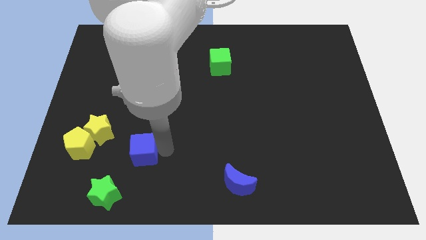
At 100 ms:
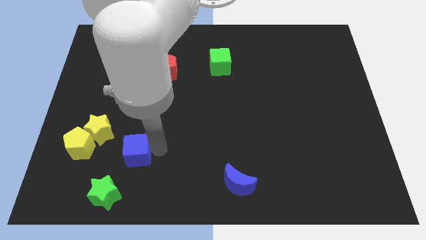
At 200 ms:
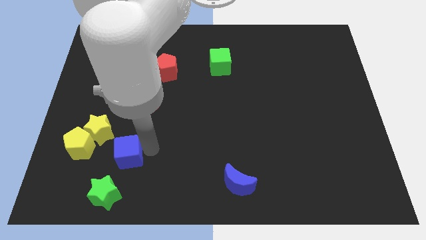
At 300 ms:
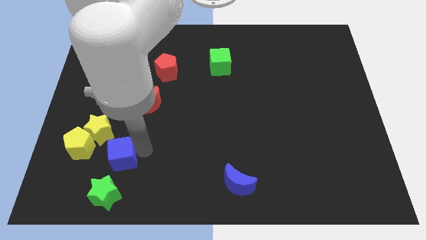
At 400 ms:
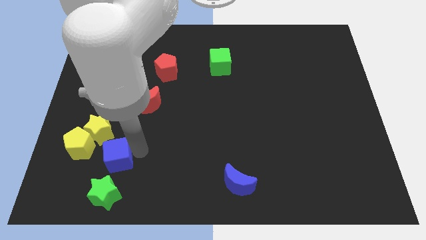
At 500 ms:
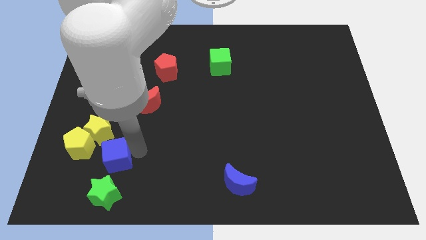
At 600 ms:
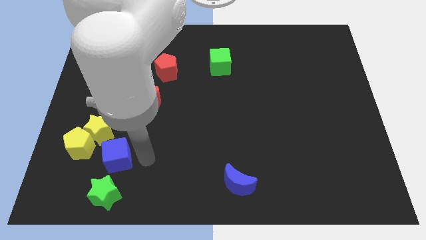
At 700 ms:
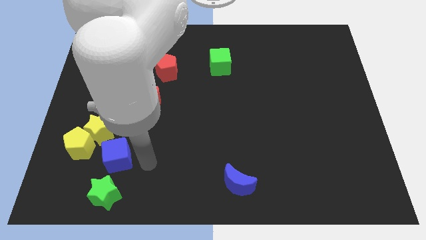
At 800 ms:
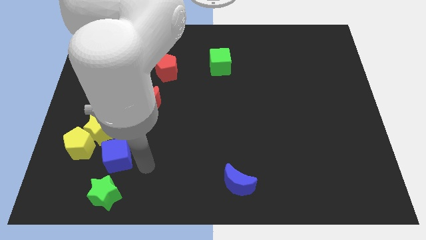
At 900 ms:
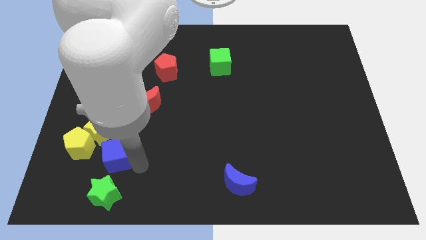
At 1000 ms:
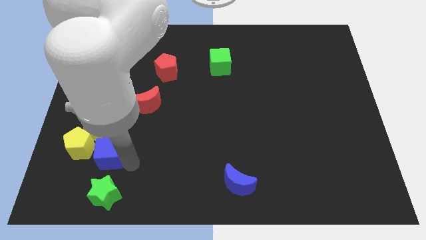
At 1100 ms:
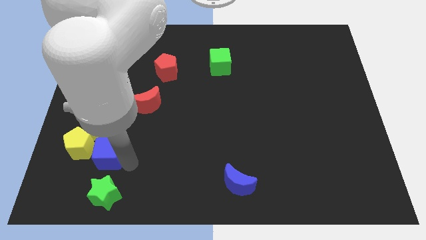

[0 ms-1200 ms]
place blue cube on the top of green star

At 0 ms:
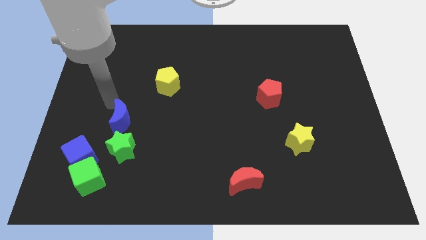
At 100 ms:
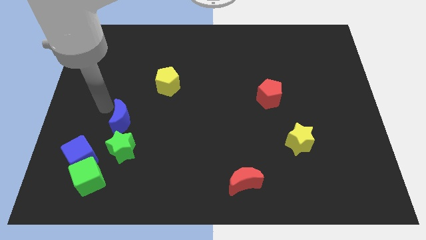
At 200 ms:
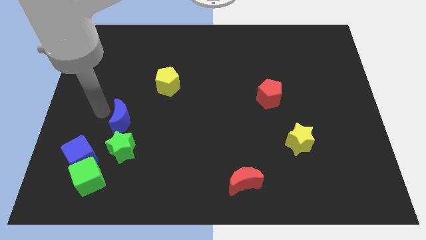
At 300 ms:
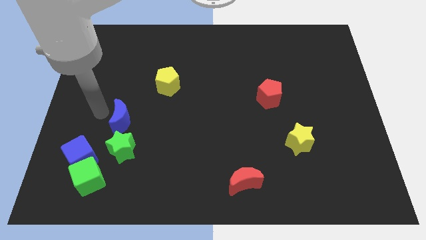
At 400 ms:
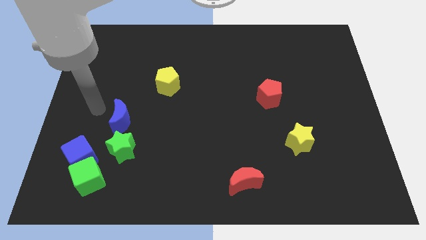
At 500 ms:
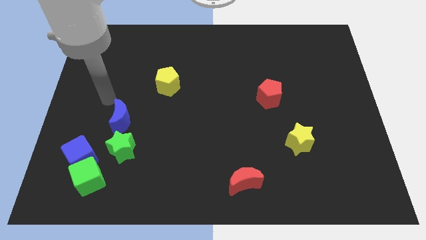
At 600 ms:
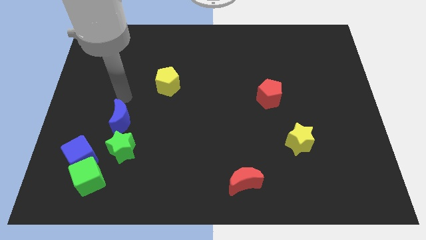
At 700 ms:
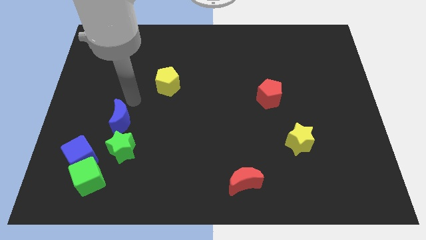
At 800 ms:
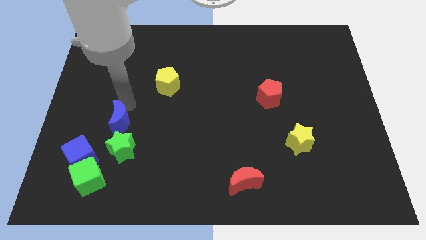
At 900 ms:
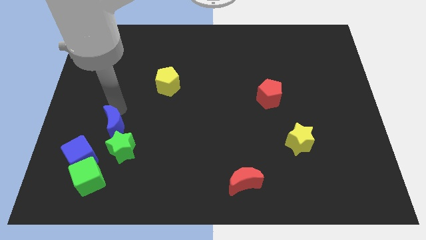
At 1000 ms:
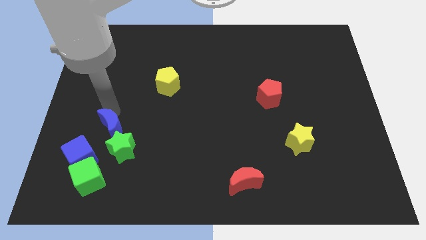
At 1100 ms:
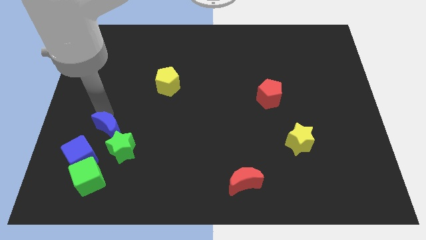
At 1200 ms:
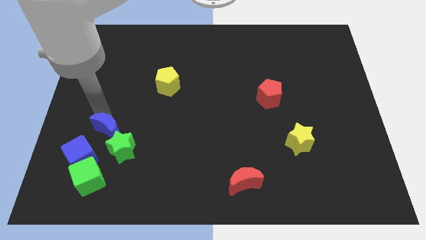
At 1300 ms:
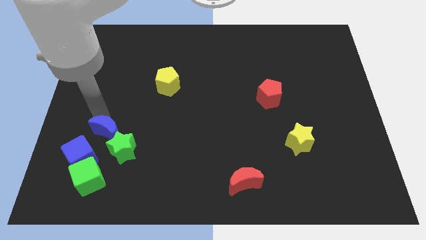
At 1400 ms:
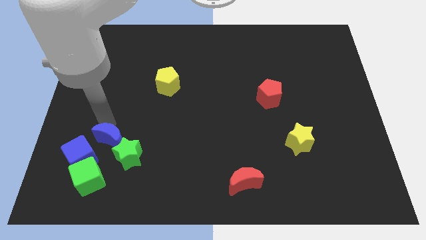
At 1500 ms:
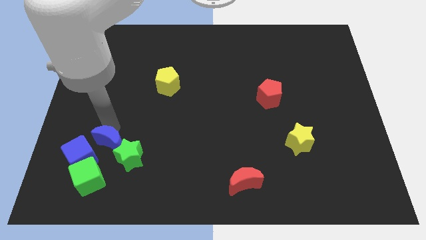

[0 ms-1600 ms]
place blue moon above the green star

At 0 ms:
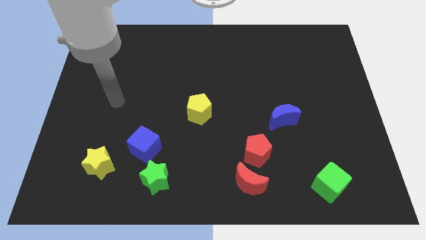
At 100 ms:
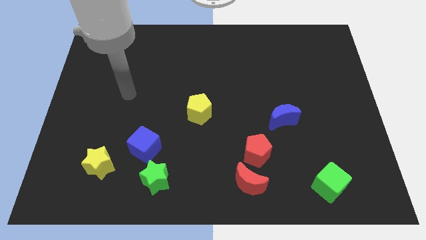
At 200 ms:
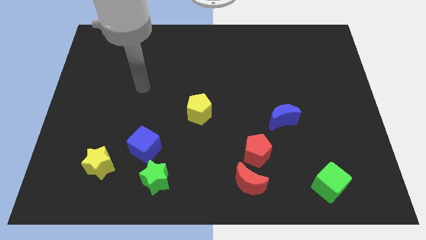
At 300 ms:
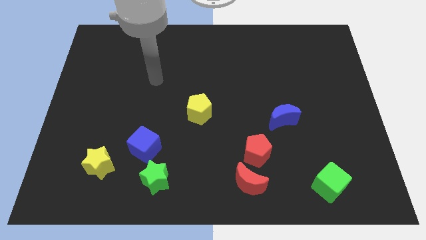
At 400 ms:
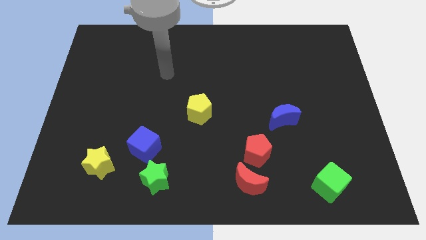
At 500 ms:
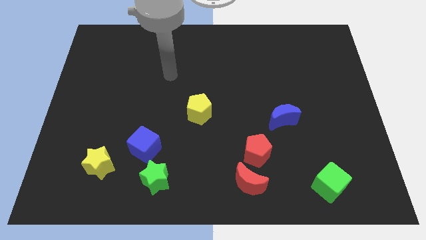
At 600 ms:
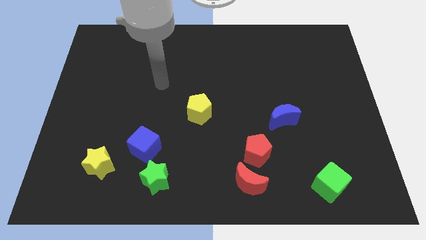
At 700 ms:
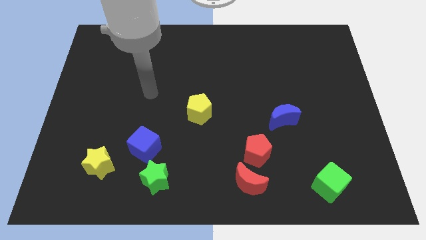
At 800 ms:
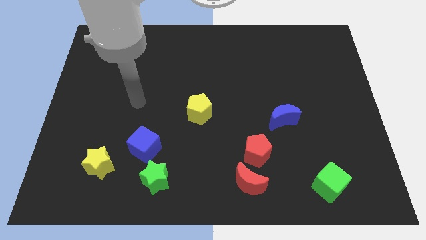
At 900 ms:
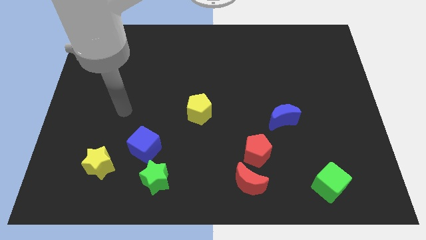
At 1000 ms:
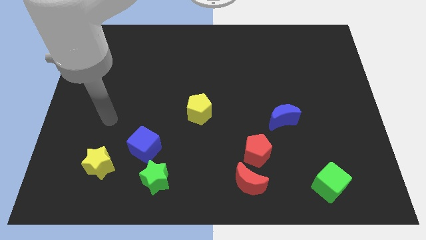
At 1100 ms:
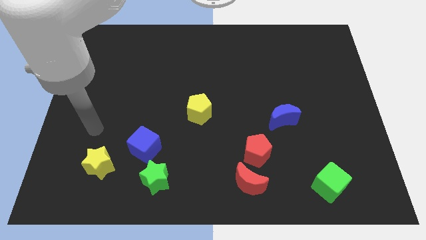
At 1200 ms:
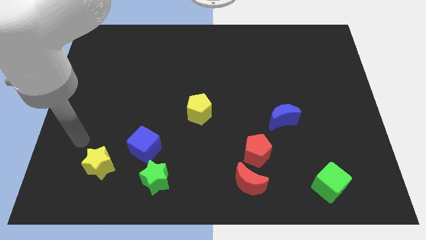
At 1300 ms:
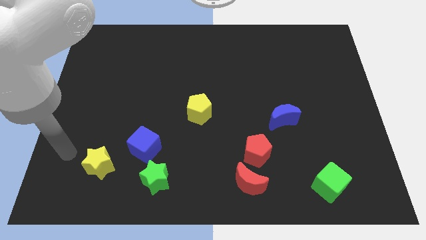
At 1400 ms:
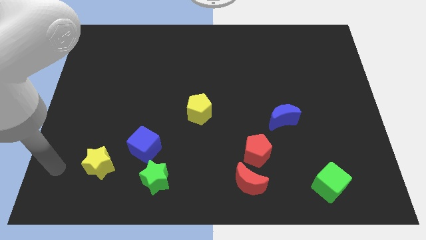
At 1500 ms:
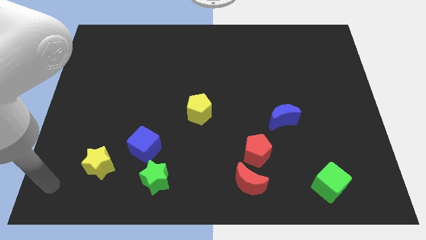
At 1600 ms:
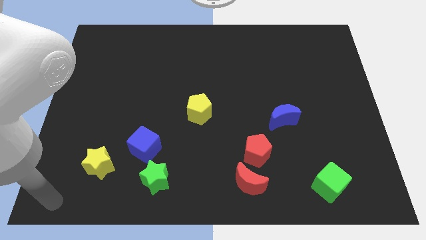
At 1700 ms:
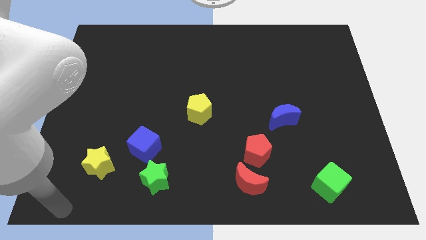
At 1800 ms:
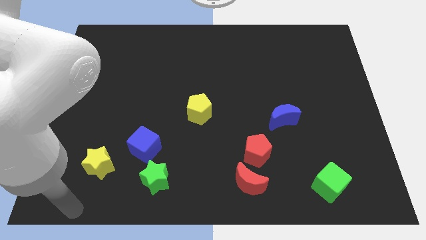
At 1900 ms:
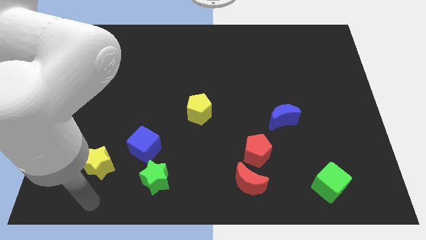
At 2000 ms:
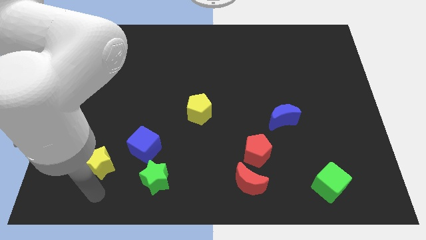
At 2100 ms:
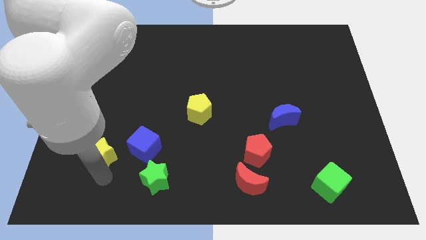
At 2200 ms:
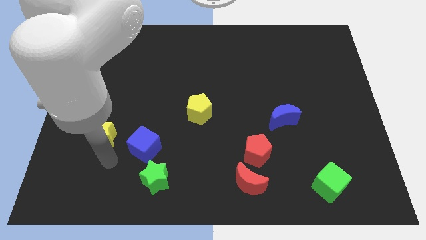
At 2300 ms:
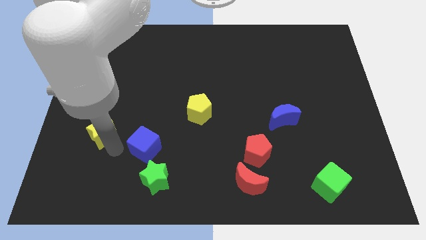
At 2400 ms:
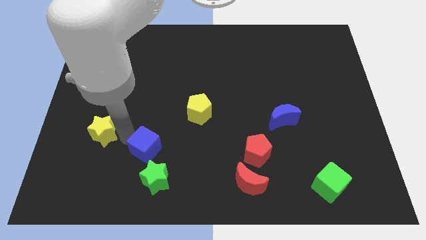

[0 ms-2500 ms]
push yellow star upwards a bit

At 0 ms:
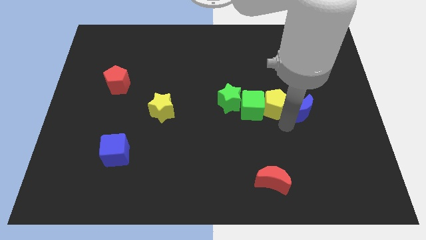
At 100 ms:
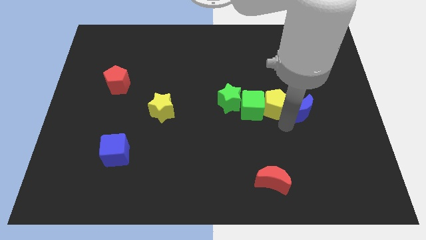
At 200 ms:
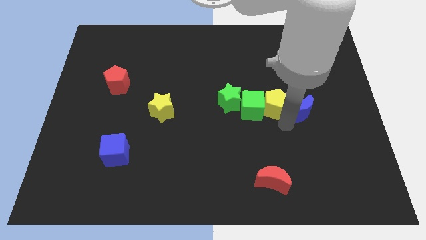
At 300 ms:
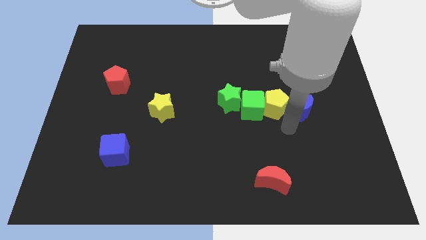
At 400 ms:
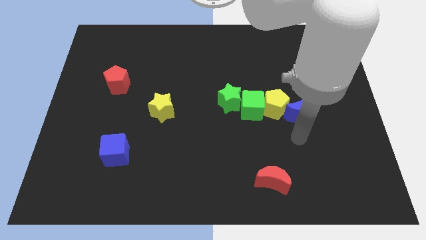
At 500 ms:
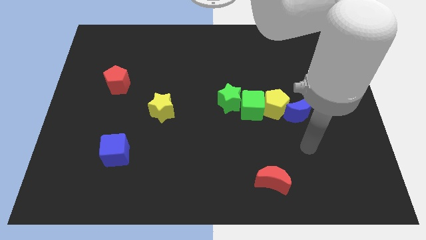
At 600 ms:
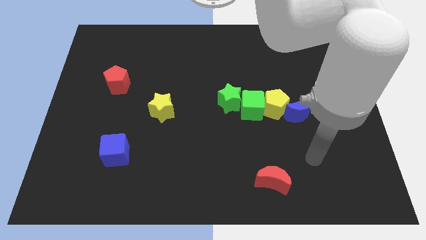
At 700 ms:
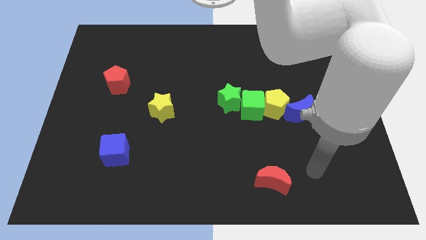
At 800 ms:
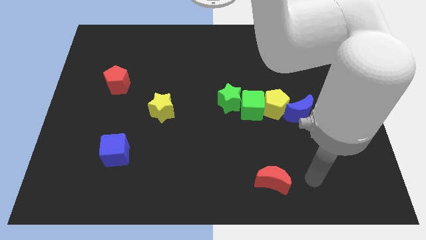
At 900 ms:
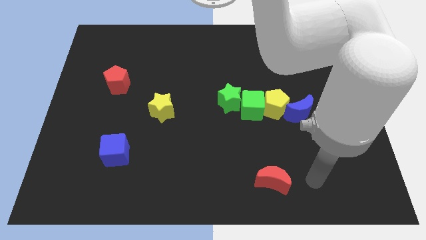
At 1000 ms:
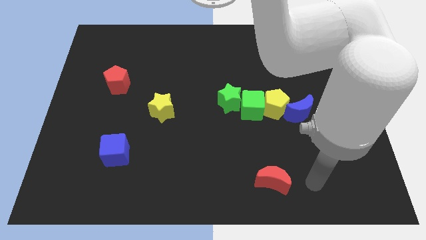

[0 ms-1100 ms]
move your arm towards the red crescent

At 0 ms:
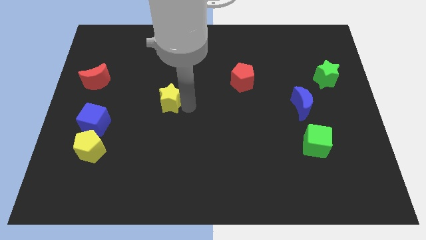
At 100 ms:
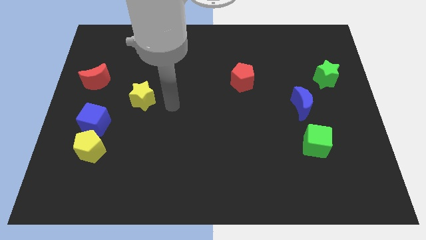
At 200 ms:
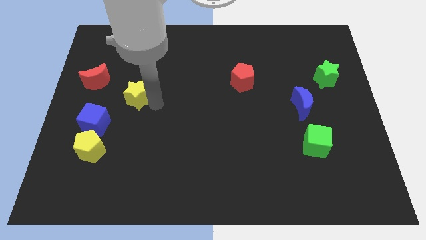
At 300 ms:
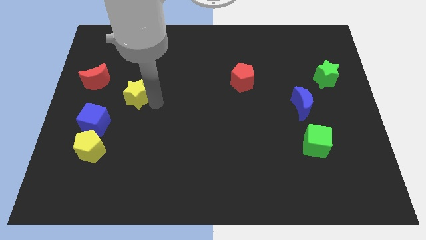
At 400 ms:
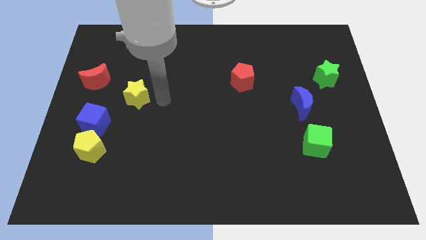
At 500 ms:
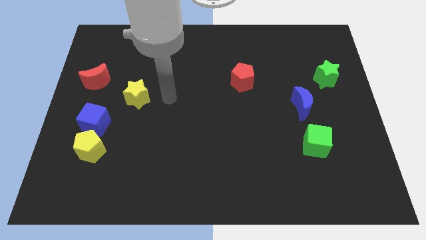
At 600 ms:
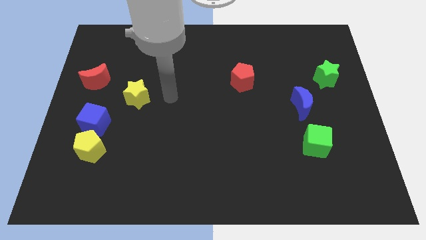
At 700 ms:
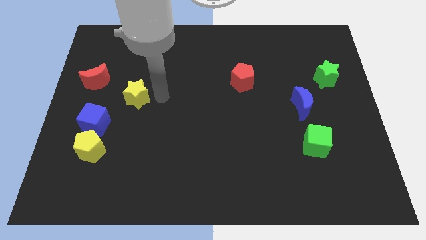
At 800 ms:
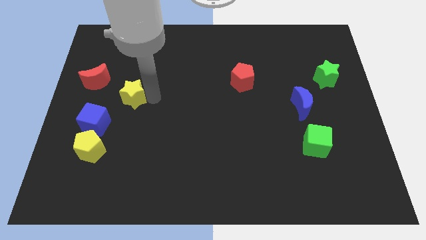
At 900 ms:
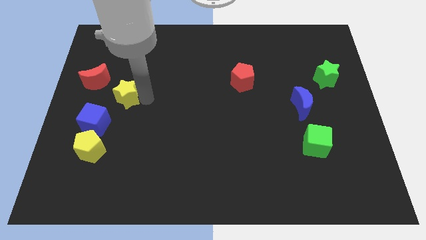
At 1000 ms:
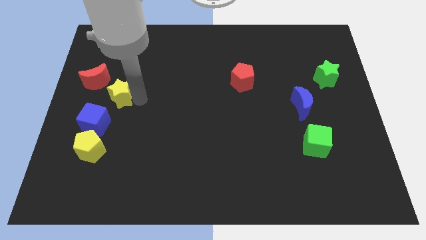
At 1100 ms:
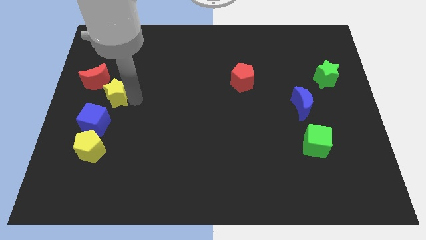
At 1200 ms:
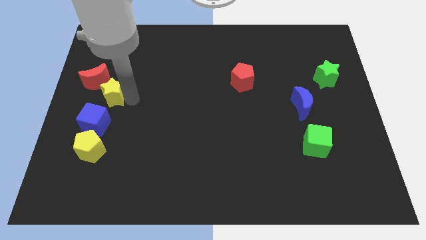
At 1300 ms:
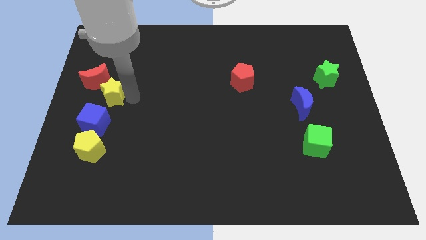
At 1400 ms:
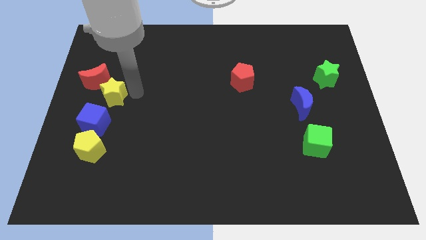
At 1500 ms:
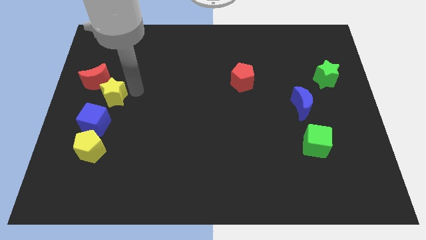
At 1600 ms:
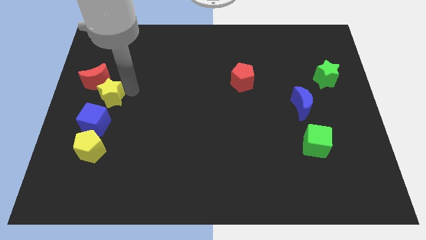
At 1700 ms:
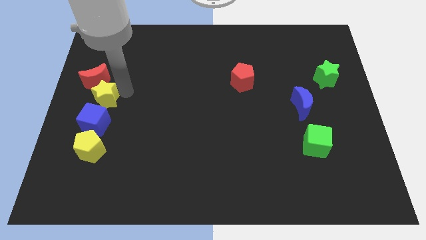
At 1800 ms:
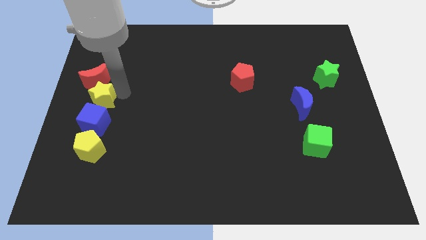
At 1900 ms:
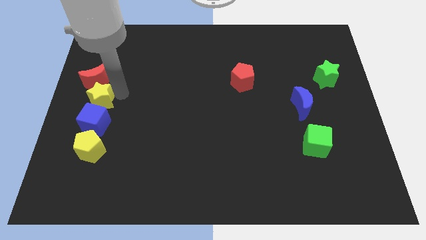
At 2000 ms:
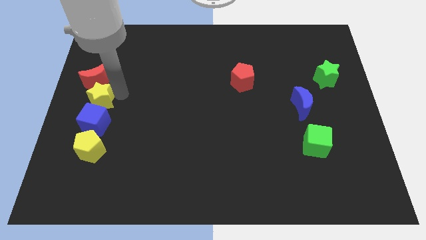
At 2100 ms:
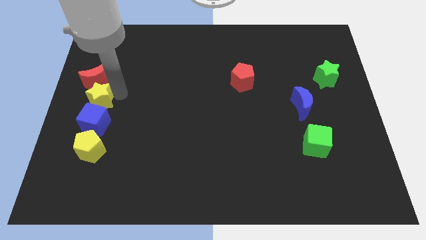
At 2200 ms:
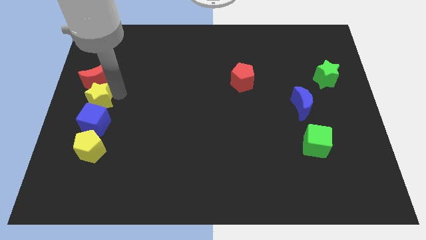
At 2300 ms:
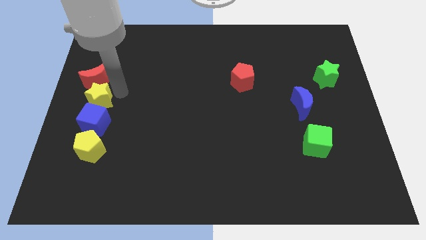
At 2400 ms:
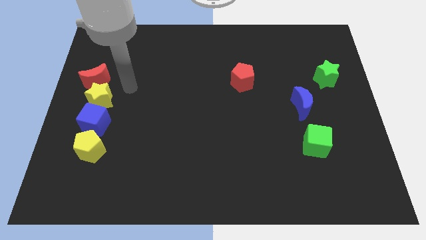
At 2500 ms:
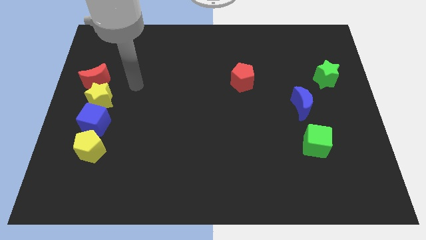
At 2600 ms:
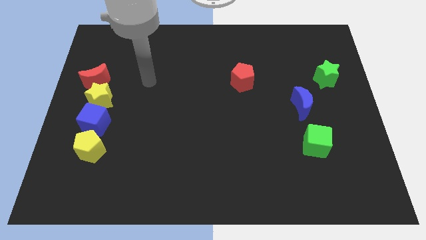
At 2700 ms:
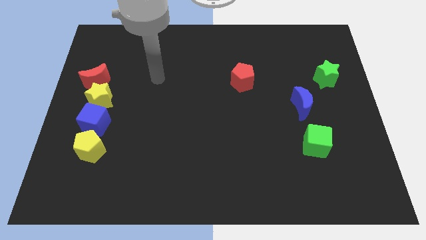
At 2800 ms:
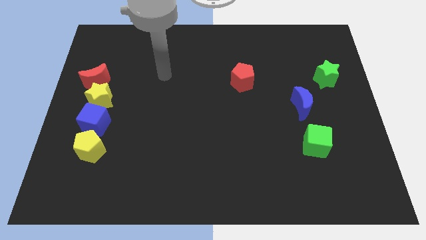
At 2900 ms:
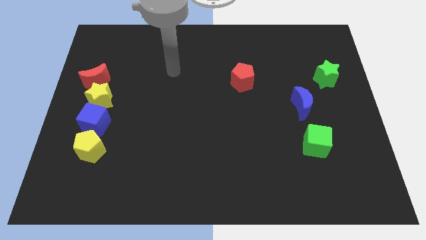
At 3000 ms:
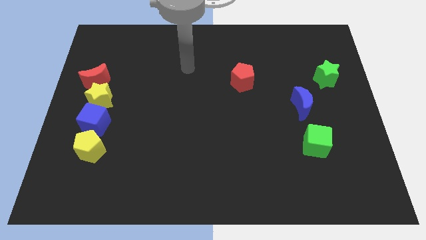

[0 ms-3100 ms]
place the yellow star below the red moon
